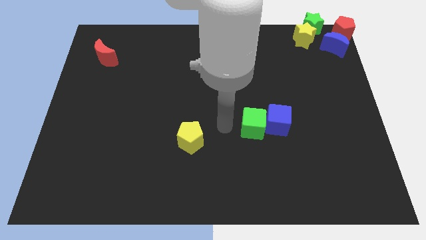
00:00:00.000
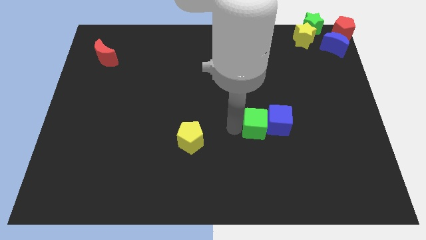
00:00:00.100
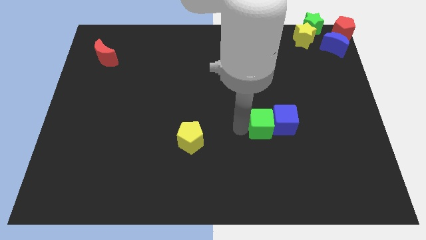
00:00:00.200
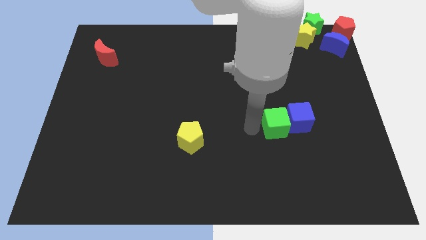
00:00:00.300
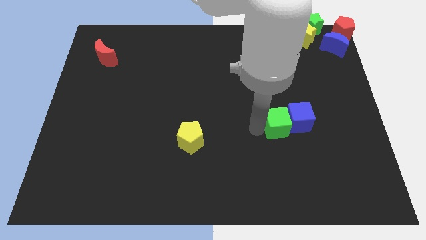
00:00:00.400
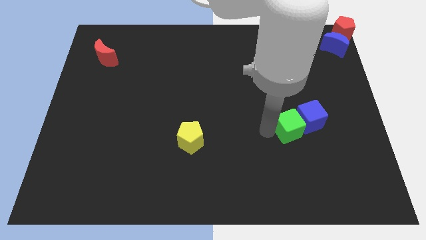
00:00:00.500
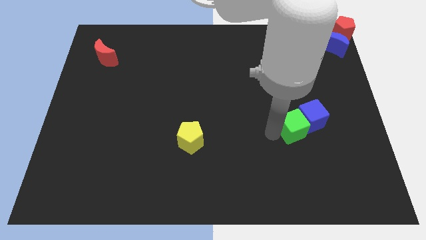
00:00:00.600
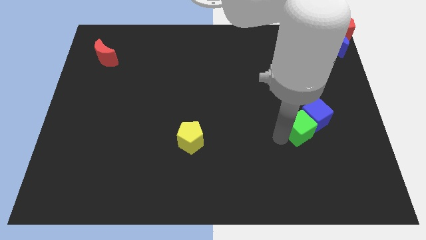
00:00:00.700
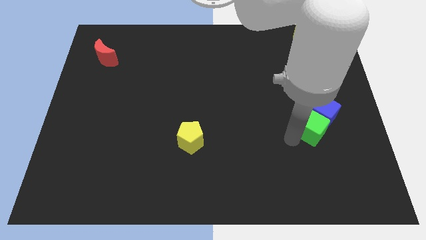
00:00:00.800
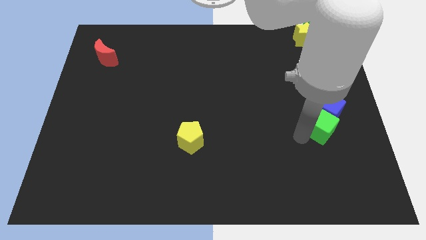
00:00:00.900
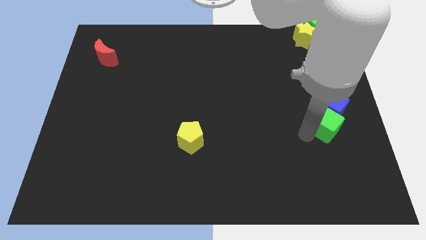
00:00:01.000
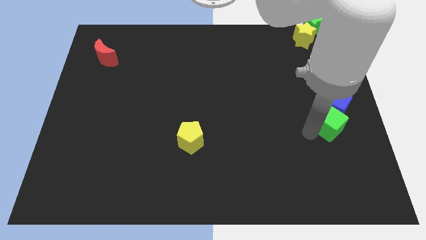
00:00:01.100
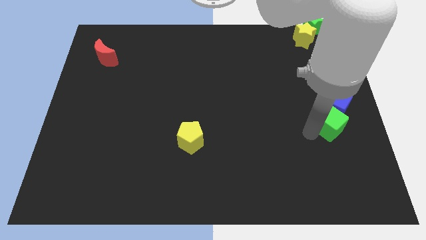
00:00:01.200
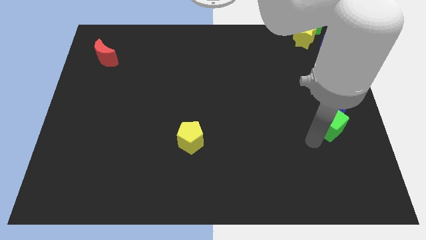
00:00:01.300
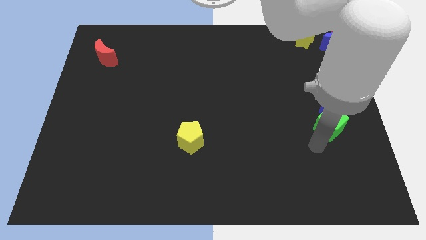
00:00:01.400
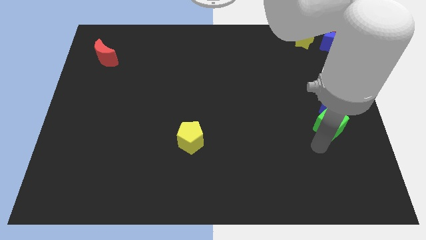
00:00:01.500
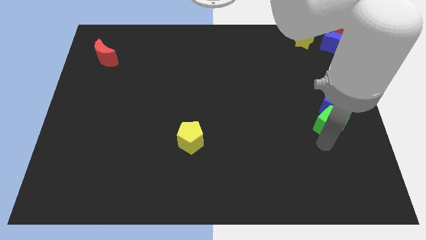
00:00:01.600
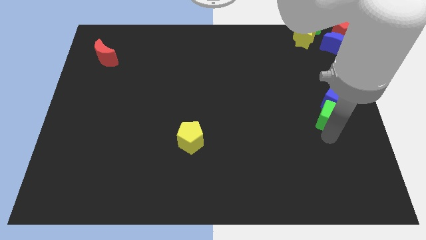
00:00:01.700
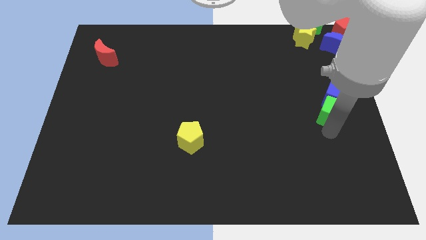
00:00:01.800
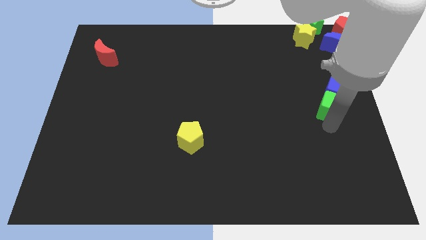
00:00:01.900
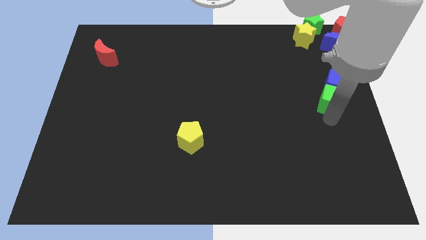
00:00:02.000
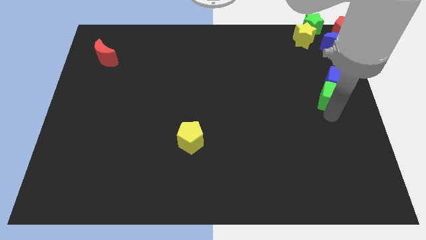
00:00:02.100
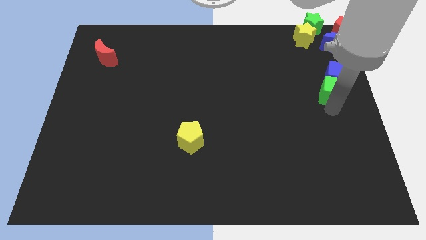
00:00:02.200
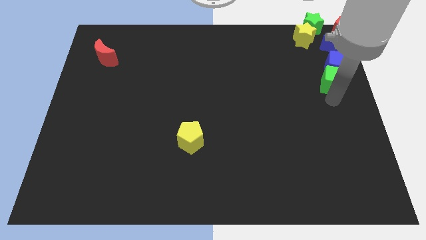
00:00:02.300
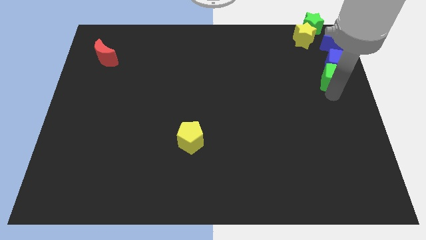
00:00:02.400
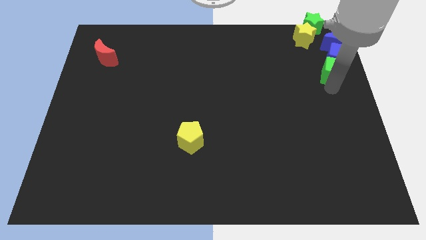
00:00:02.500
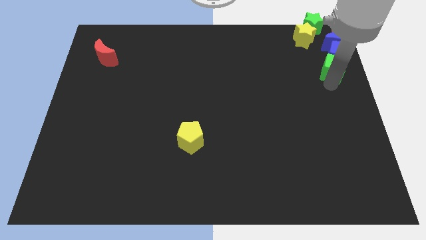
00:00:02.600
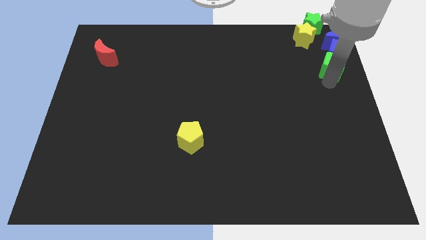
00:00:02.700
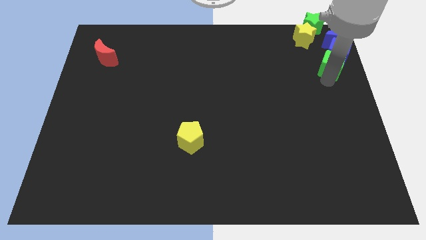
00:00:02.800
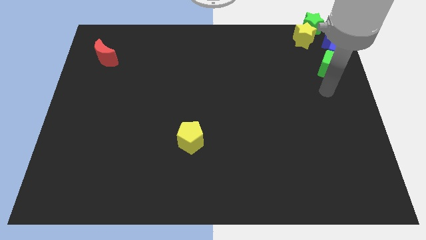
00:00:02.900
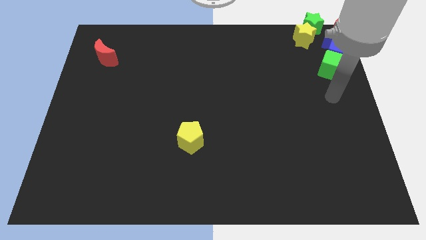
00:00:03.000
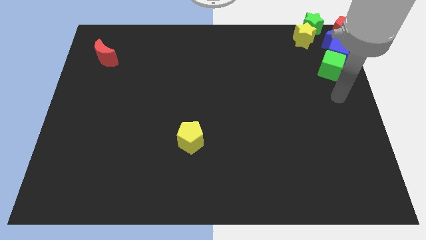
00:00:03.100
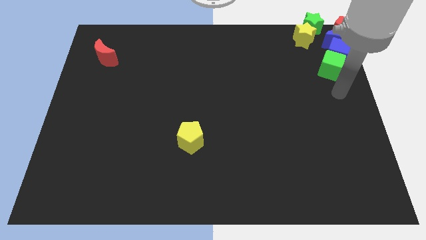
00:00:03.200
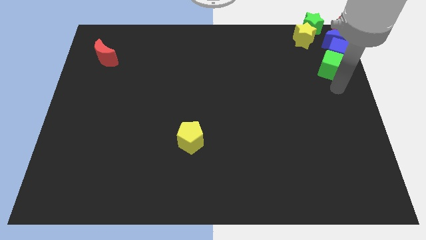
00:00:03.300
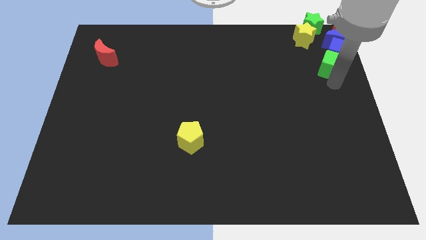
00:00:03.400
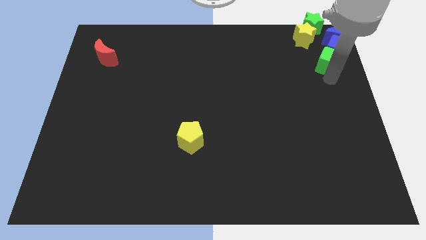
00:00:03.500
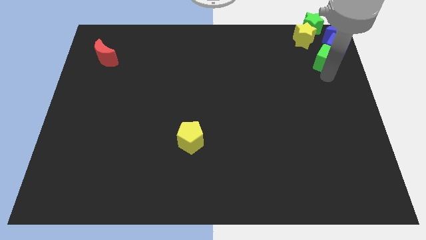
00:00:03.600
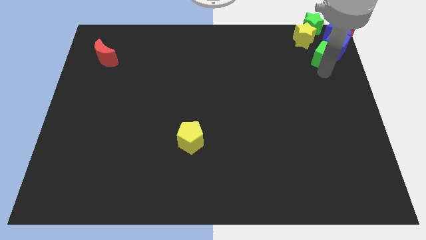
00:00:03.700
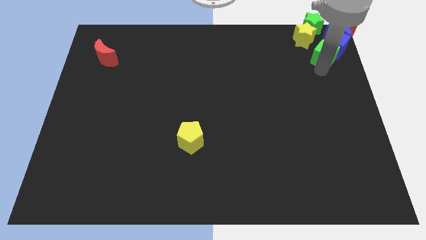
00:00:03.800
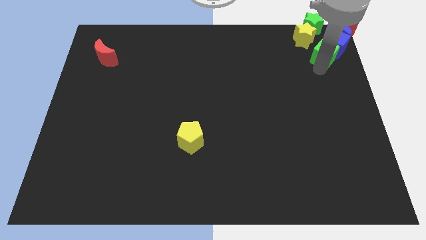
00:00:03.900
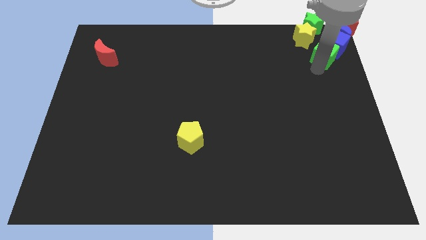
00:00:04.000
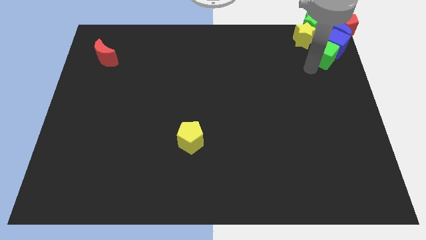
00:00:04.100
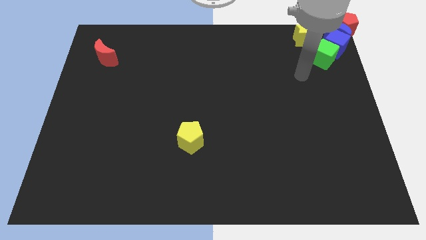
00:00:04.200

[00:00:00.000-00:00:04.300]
move the blue cube into the blue crescent with the help of the green cube

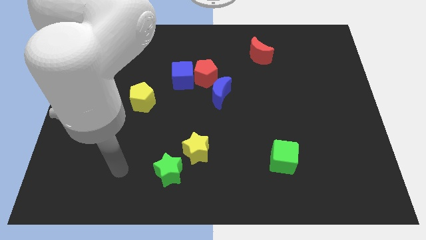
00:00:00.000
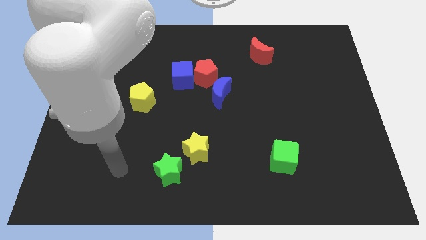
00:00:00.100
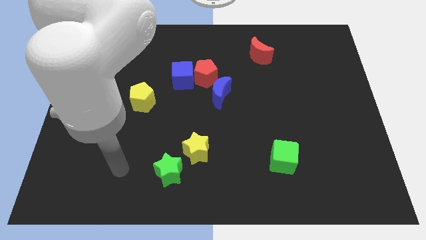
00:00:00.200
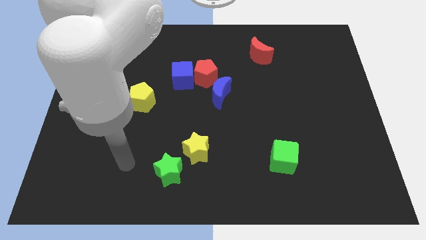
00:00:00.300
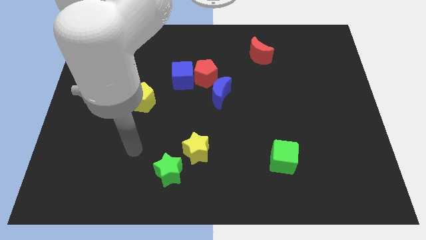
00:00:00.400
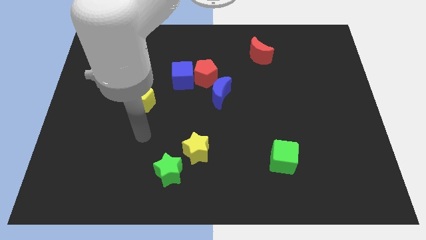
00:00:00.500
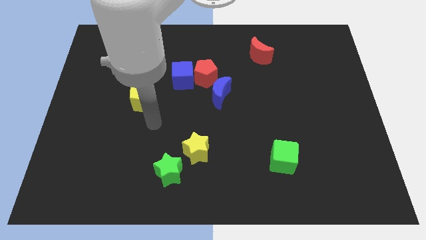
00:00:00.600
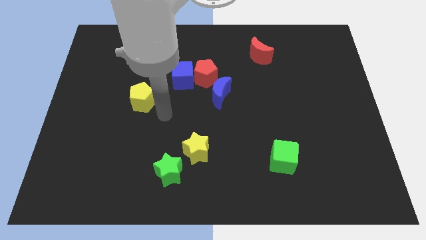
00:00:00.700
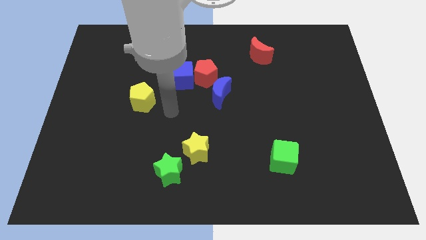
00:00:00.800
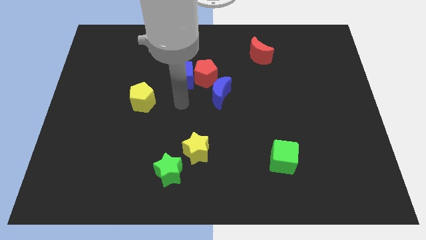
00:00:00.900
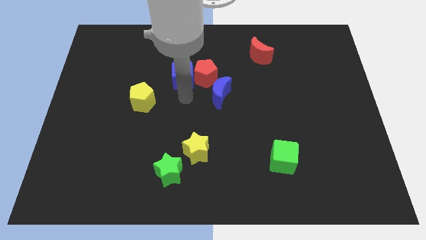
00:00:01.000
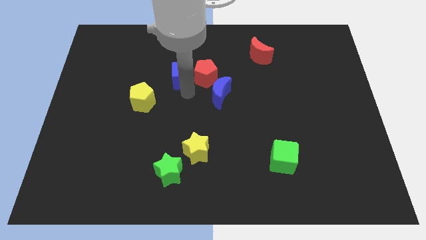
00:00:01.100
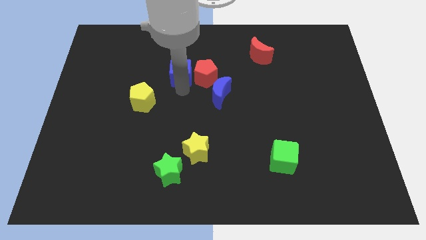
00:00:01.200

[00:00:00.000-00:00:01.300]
place the arm down to the blue cube

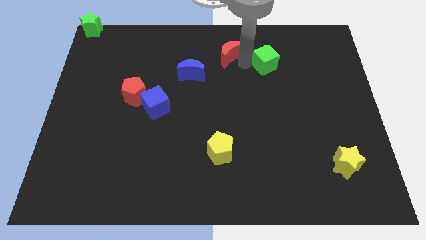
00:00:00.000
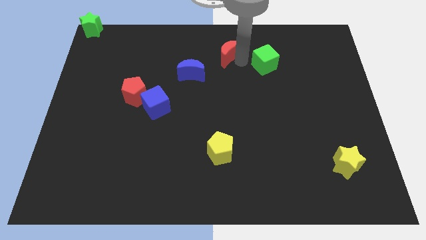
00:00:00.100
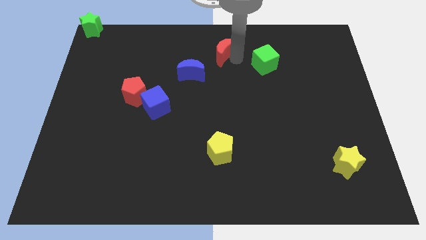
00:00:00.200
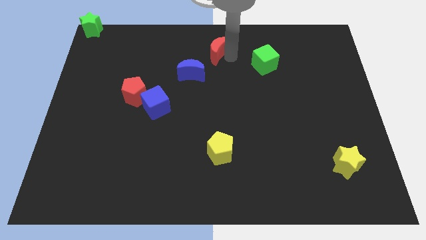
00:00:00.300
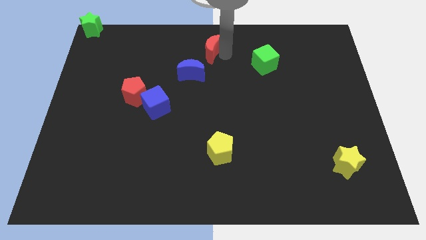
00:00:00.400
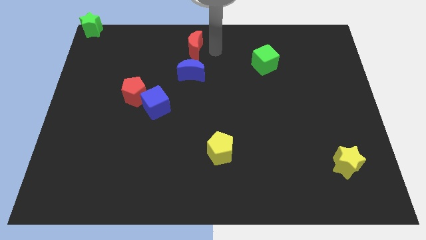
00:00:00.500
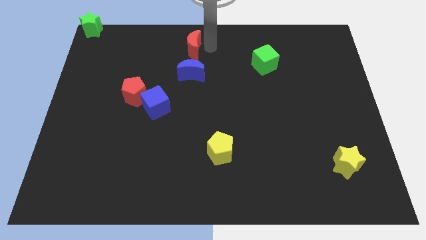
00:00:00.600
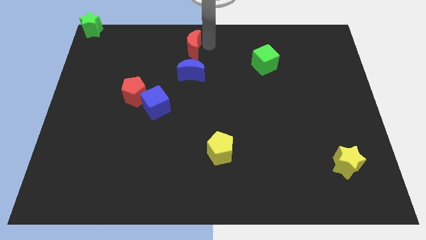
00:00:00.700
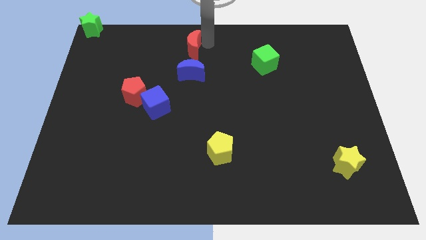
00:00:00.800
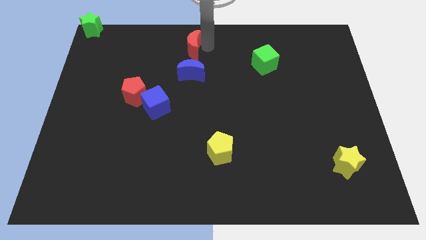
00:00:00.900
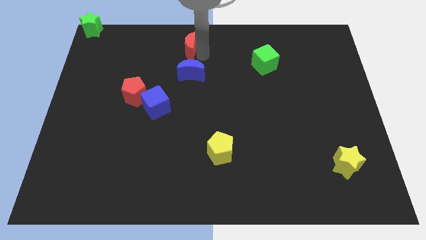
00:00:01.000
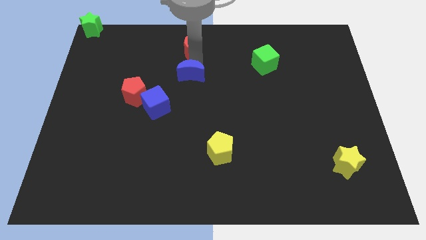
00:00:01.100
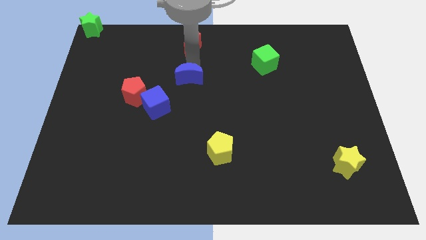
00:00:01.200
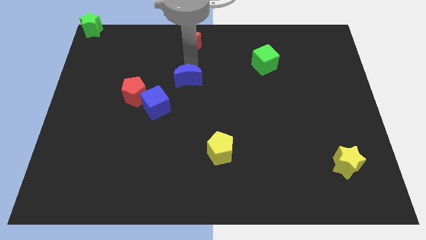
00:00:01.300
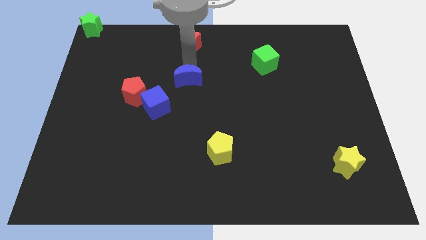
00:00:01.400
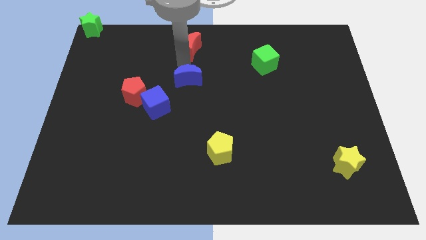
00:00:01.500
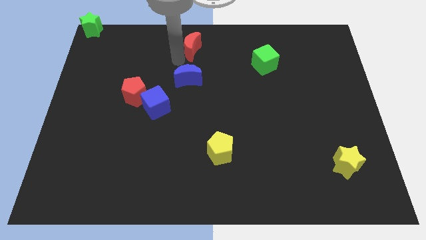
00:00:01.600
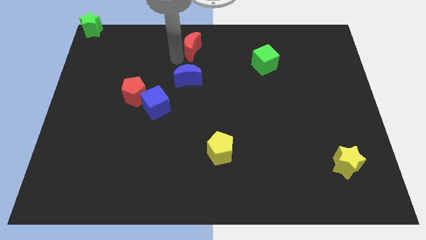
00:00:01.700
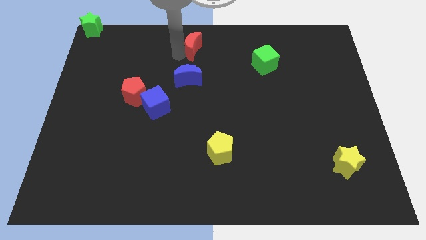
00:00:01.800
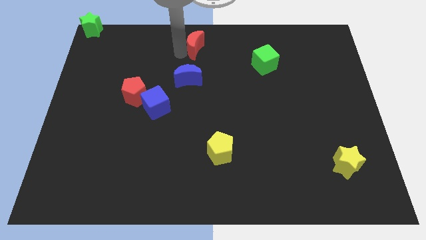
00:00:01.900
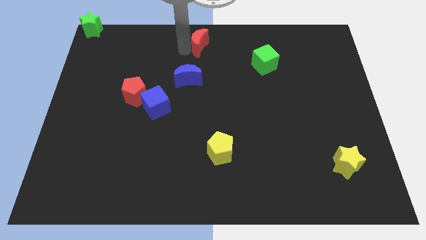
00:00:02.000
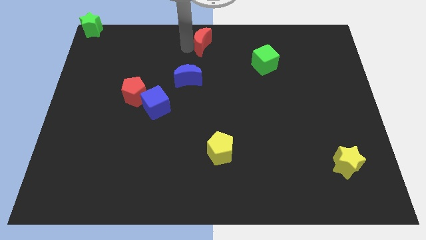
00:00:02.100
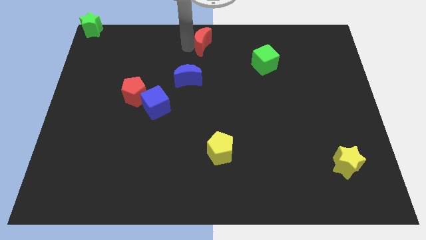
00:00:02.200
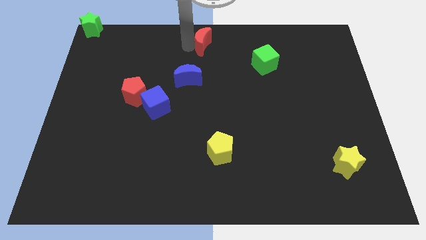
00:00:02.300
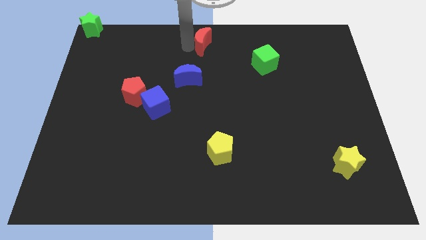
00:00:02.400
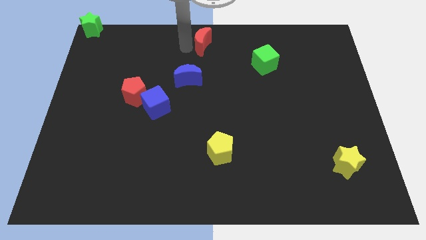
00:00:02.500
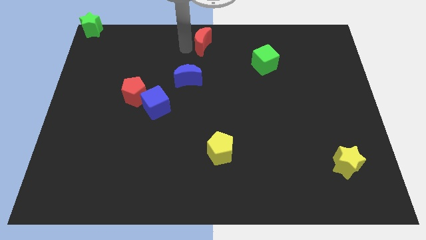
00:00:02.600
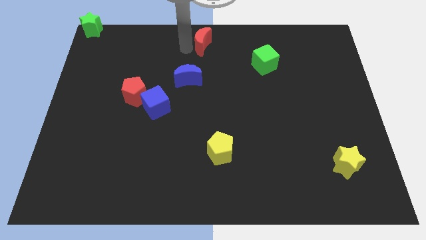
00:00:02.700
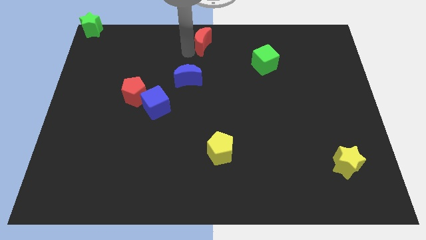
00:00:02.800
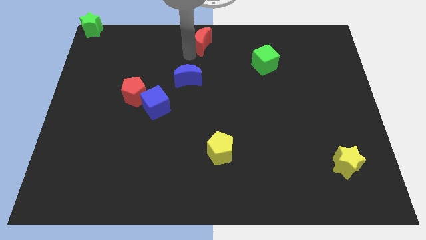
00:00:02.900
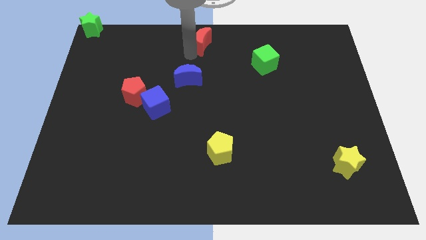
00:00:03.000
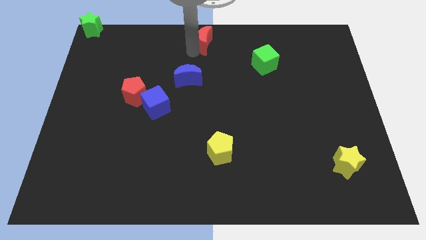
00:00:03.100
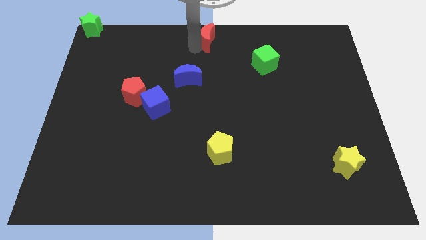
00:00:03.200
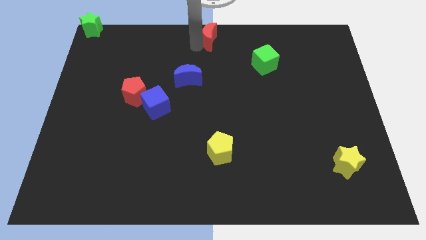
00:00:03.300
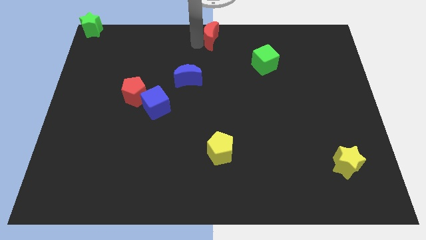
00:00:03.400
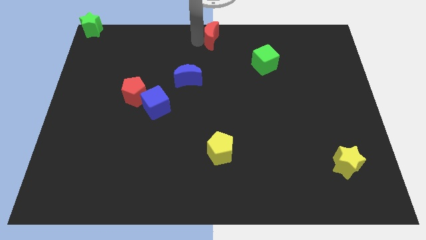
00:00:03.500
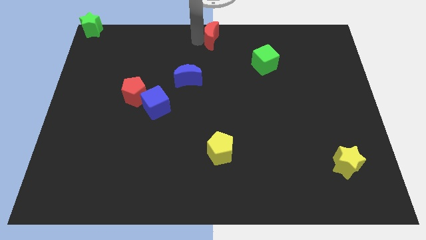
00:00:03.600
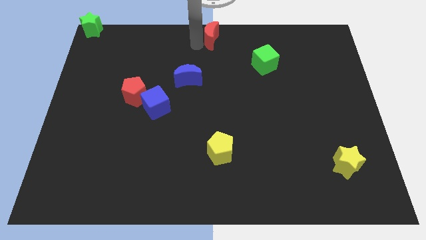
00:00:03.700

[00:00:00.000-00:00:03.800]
move the red crescent to the top center of the board
